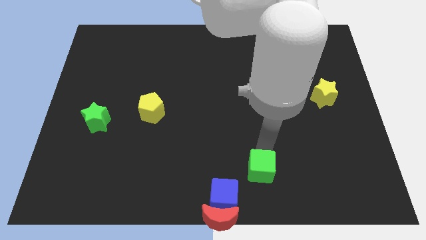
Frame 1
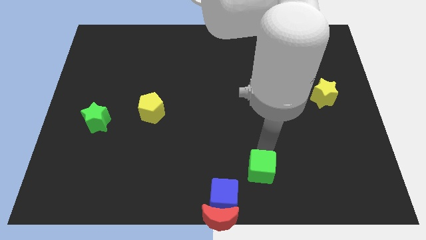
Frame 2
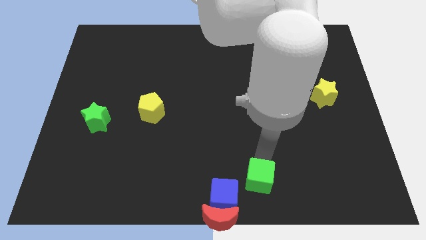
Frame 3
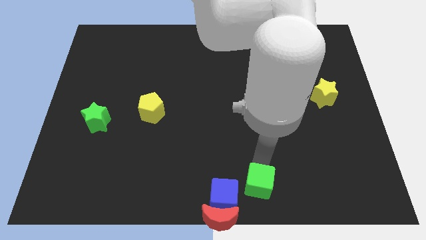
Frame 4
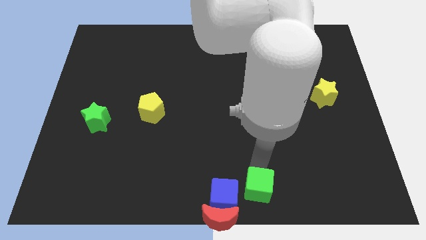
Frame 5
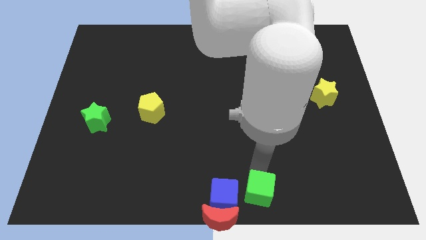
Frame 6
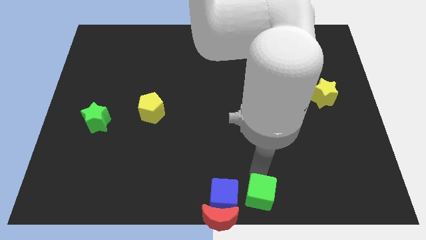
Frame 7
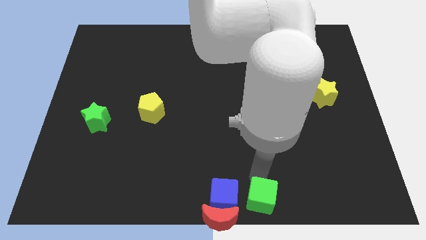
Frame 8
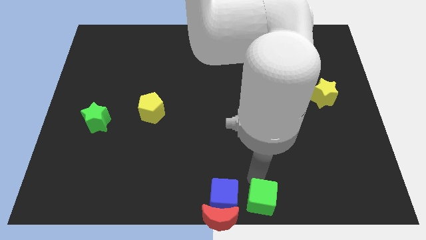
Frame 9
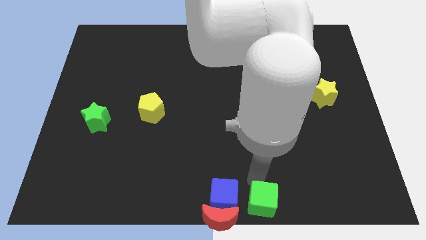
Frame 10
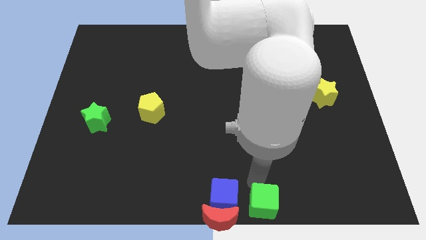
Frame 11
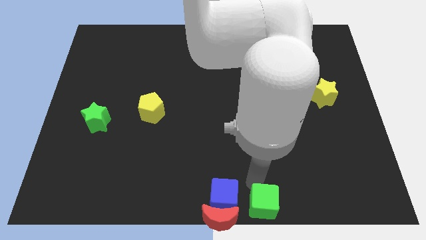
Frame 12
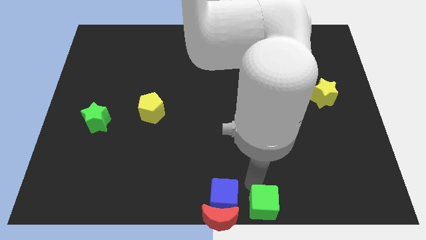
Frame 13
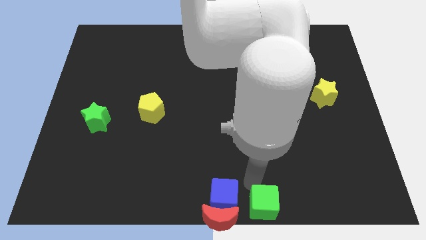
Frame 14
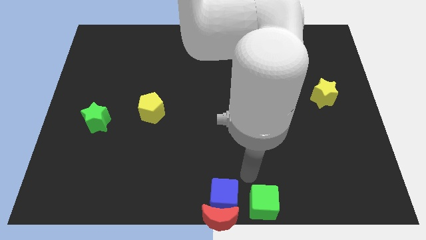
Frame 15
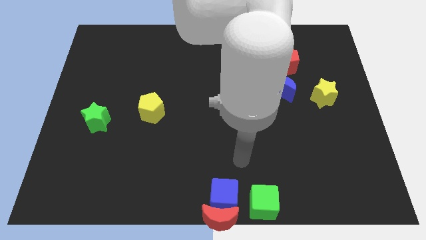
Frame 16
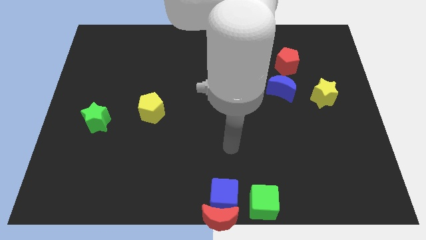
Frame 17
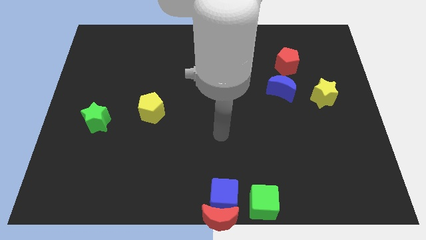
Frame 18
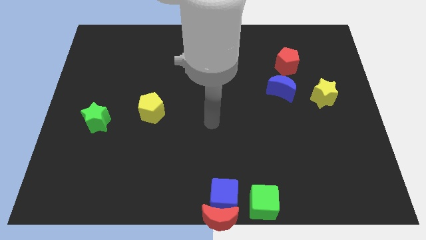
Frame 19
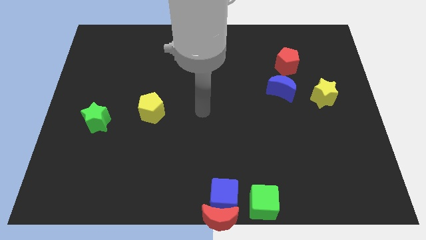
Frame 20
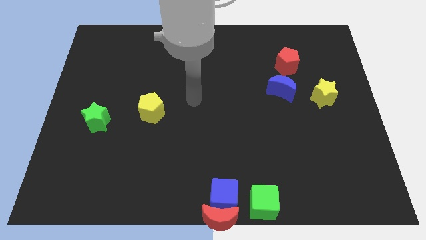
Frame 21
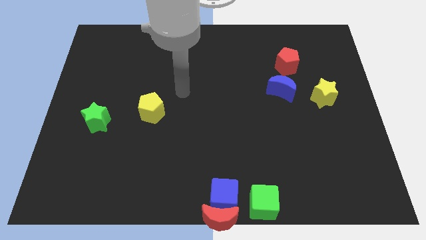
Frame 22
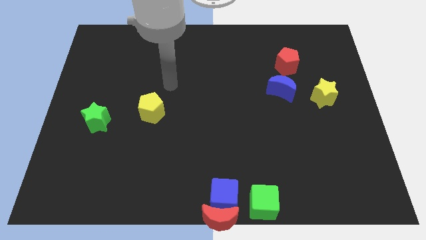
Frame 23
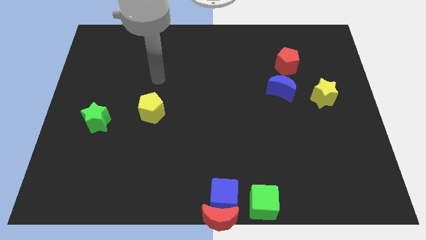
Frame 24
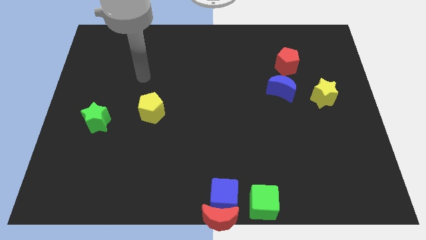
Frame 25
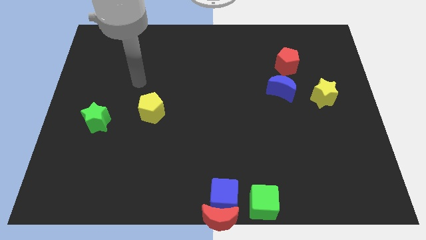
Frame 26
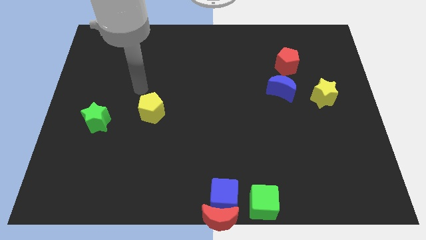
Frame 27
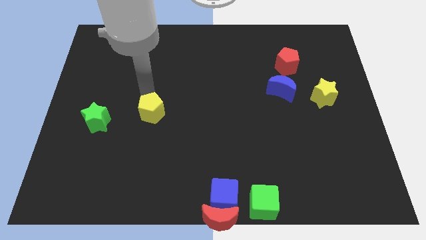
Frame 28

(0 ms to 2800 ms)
place the arm above the yellow pentagon

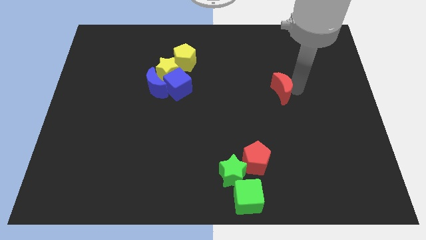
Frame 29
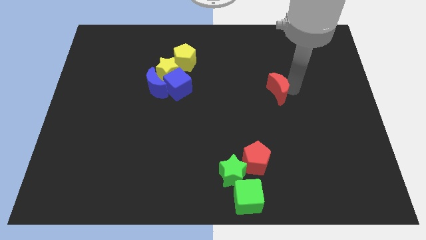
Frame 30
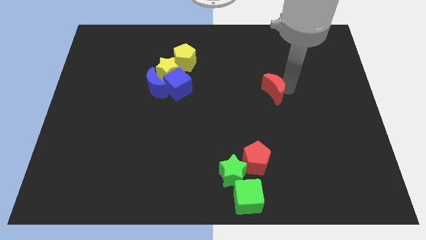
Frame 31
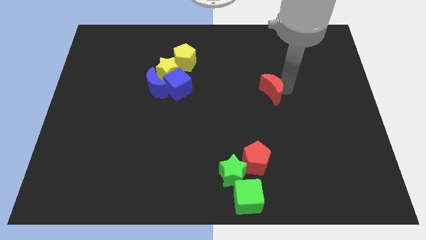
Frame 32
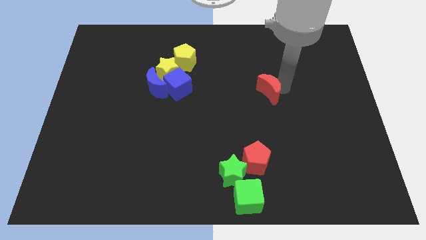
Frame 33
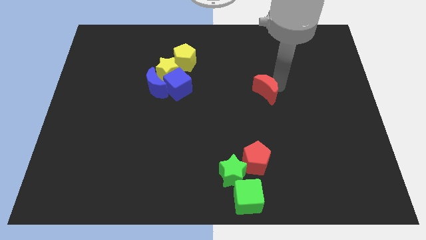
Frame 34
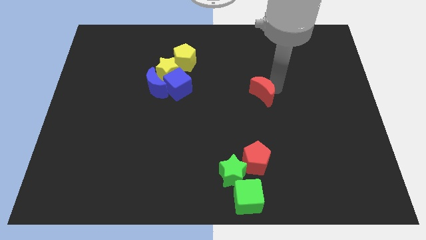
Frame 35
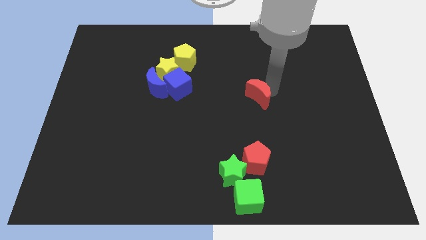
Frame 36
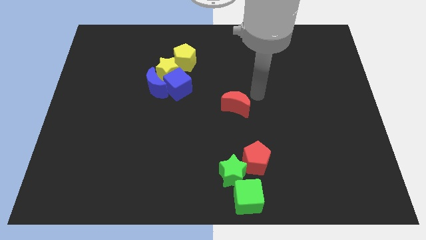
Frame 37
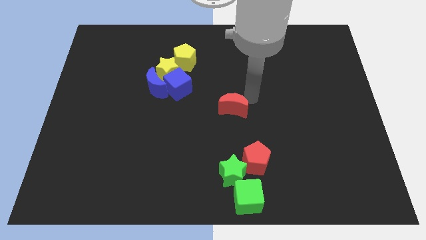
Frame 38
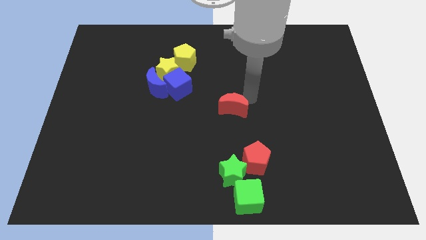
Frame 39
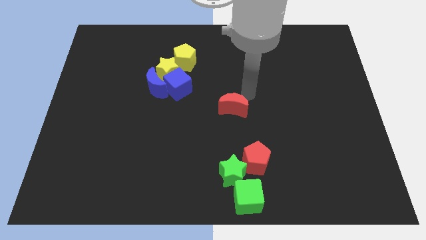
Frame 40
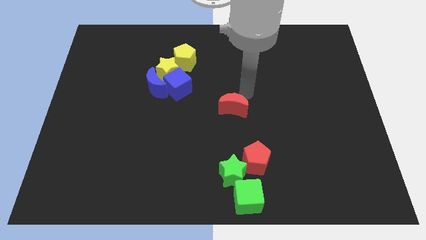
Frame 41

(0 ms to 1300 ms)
place the red crescent at center of the board

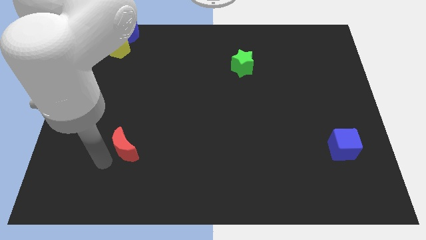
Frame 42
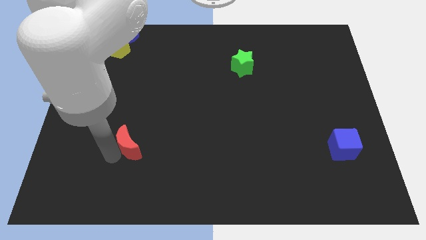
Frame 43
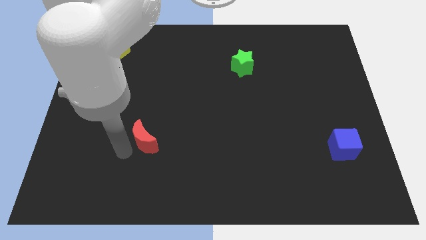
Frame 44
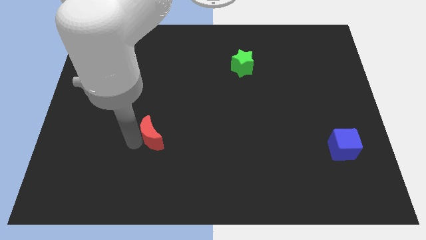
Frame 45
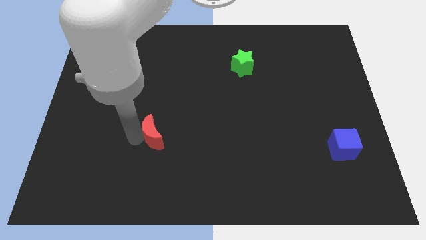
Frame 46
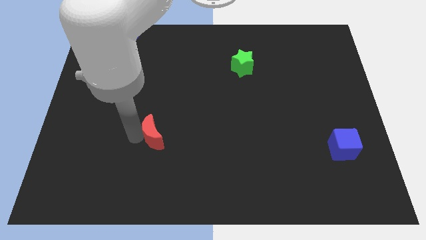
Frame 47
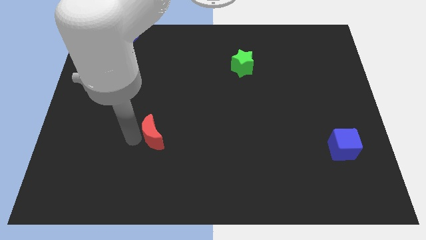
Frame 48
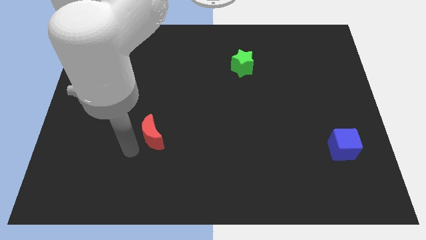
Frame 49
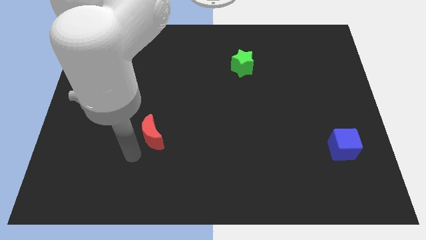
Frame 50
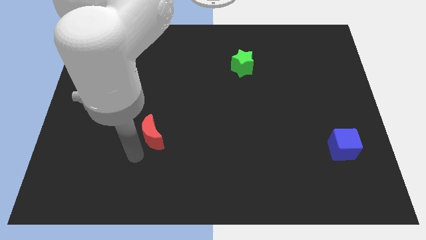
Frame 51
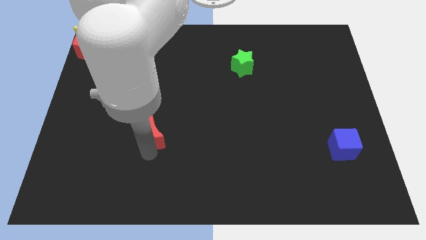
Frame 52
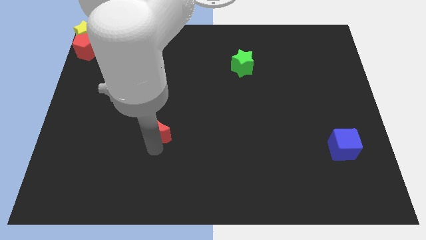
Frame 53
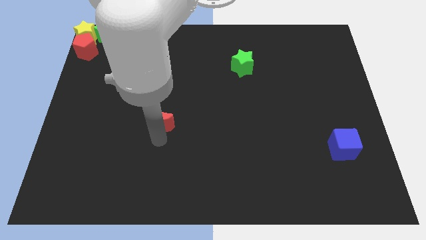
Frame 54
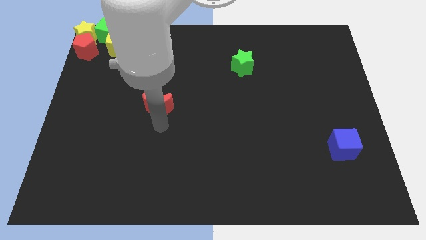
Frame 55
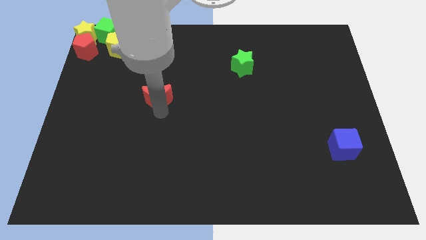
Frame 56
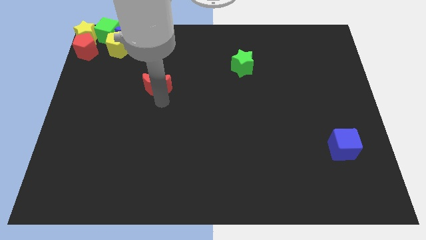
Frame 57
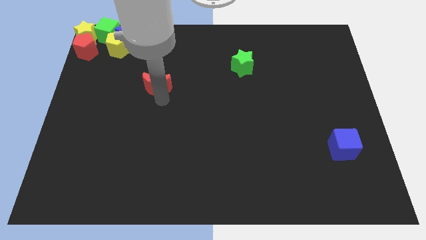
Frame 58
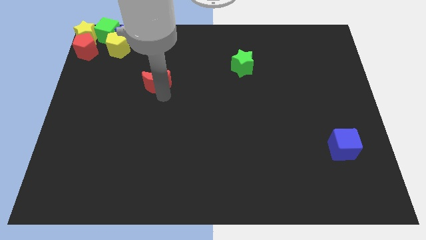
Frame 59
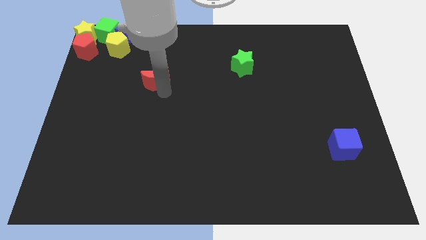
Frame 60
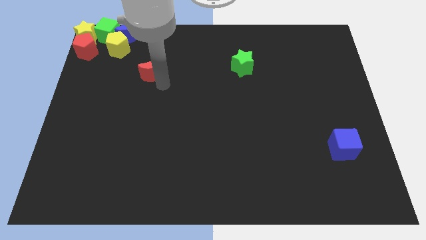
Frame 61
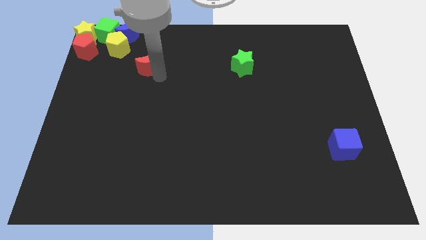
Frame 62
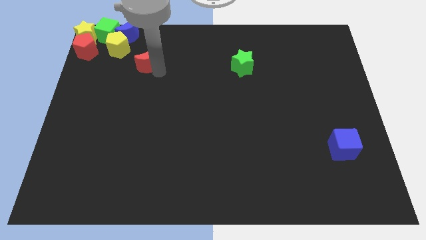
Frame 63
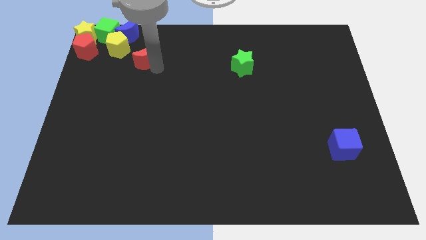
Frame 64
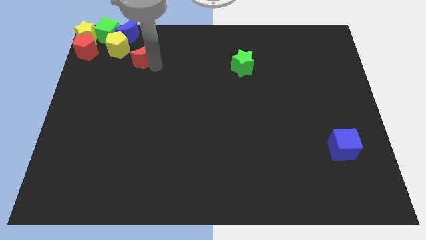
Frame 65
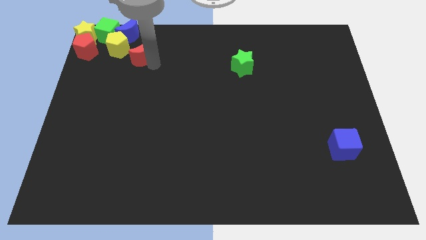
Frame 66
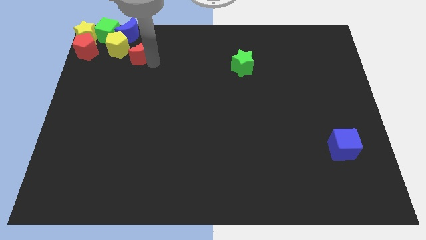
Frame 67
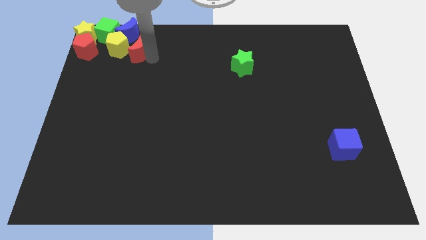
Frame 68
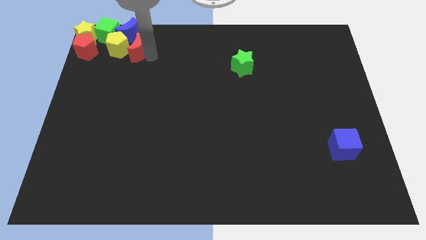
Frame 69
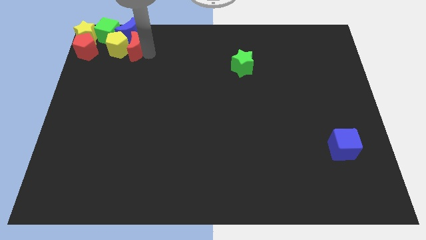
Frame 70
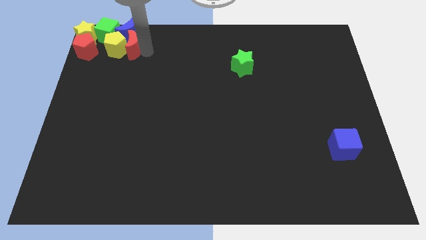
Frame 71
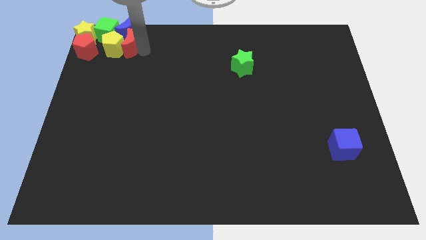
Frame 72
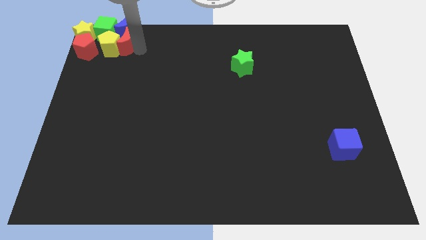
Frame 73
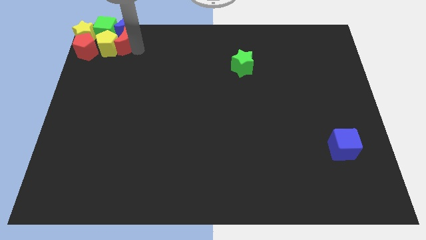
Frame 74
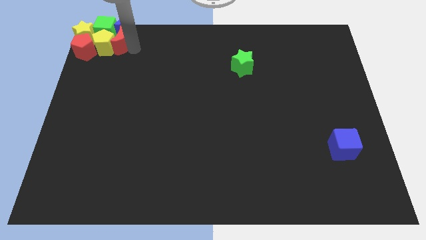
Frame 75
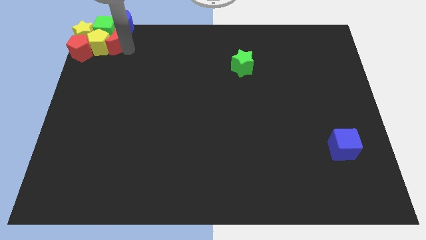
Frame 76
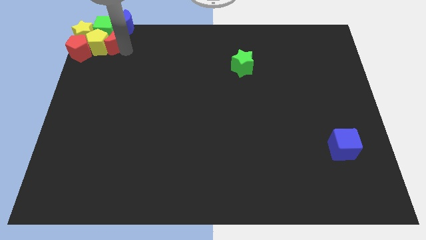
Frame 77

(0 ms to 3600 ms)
move the red moon right to the yellow pentagon

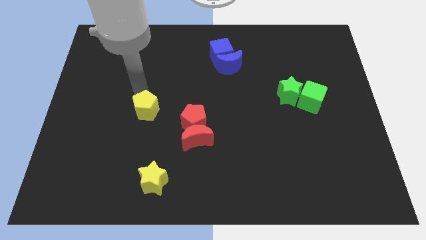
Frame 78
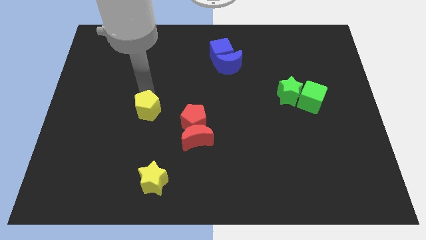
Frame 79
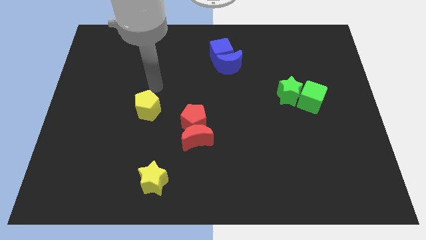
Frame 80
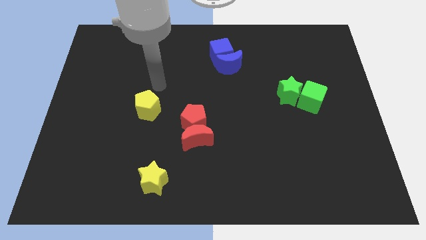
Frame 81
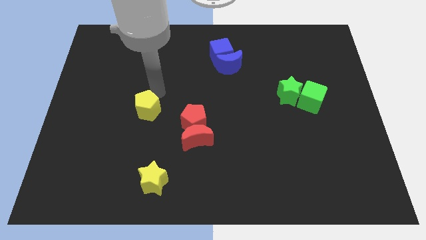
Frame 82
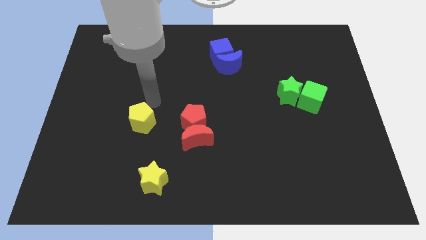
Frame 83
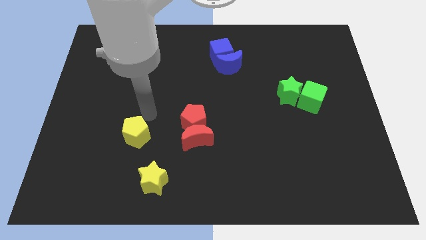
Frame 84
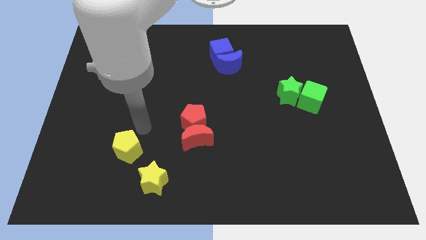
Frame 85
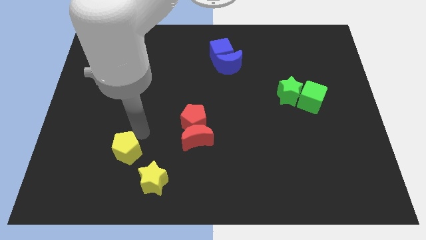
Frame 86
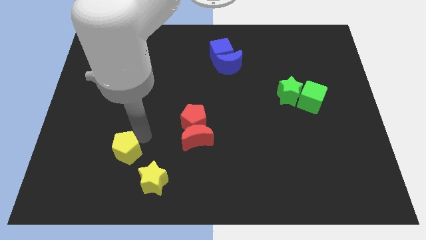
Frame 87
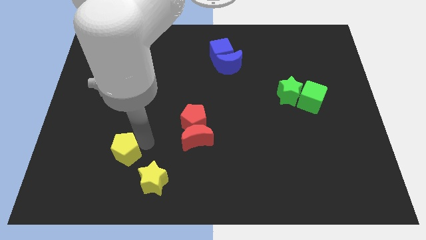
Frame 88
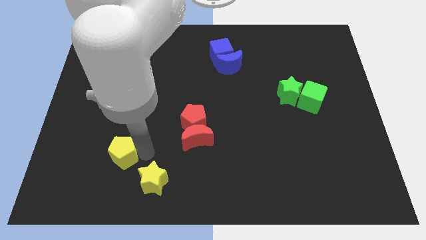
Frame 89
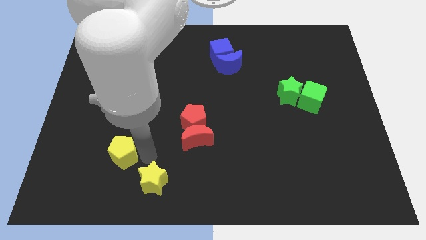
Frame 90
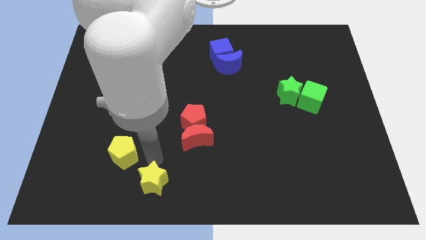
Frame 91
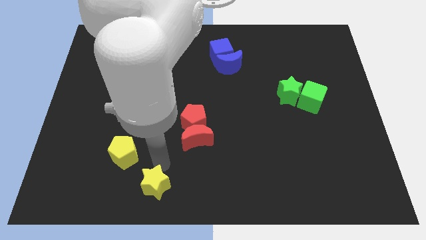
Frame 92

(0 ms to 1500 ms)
place the yellow pentagon towards the top of the yellow star
